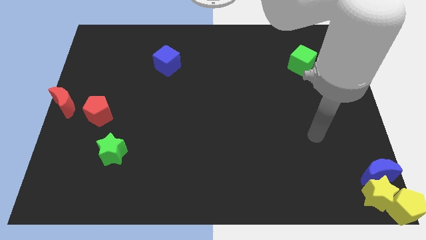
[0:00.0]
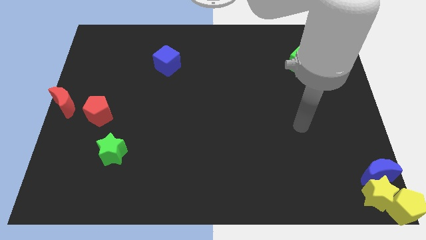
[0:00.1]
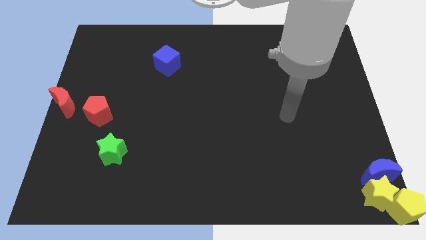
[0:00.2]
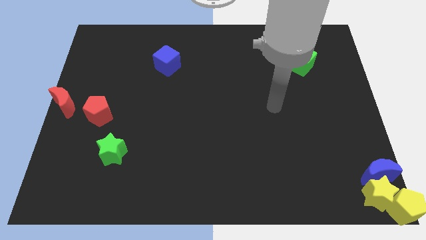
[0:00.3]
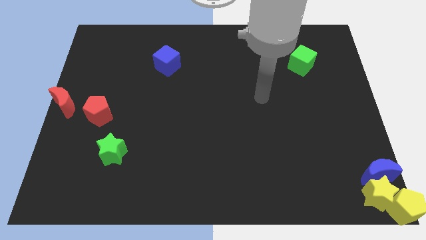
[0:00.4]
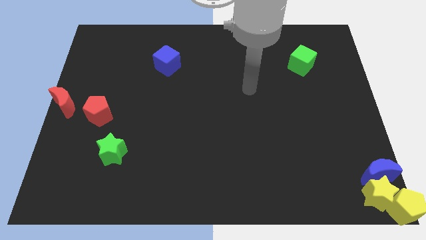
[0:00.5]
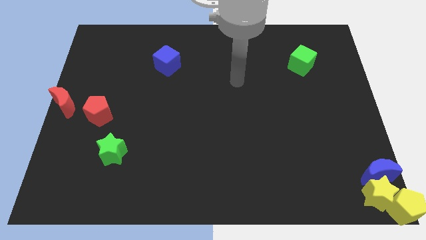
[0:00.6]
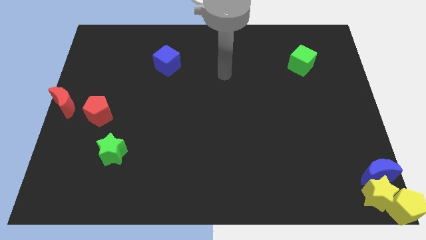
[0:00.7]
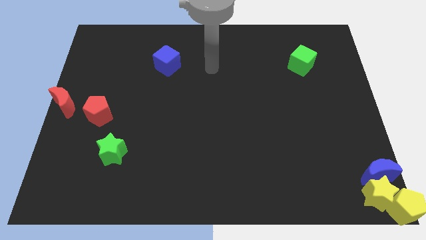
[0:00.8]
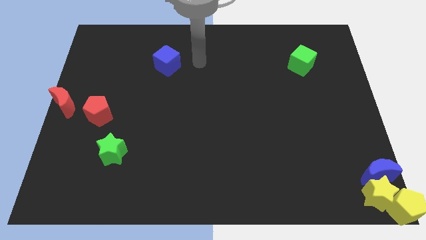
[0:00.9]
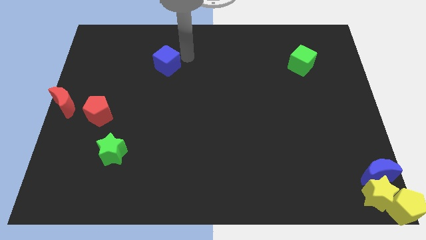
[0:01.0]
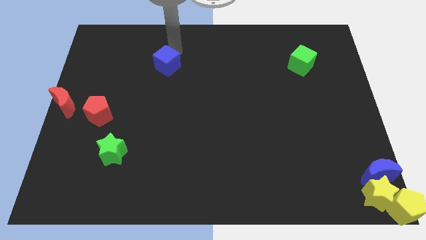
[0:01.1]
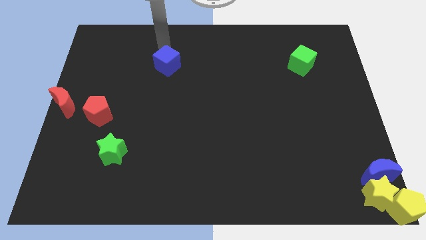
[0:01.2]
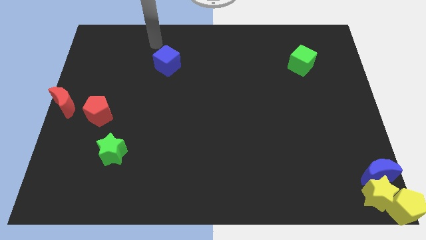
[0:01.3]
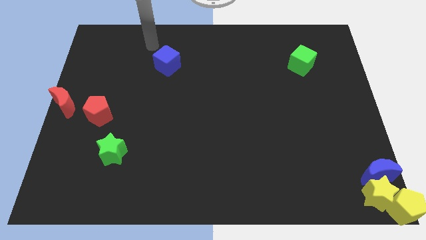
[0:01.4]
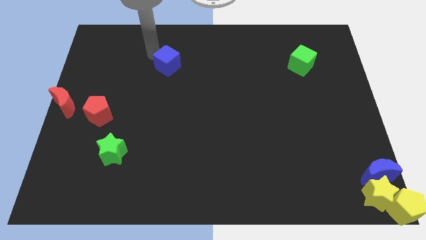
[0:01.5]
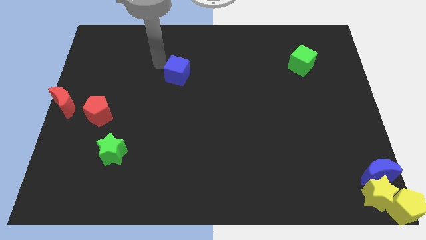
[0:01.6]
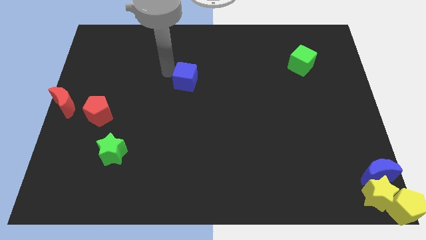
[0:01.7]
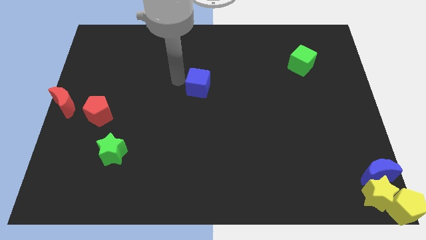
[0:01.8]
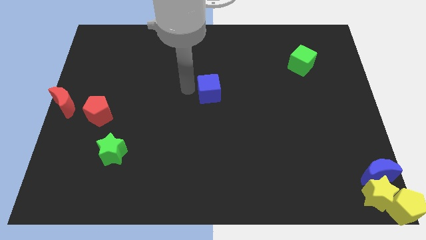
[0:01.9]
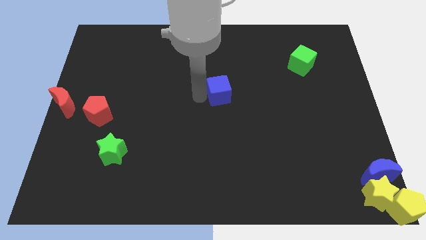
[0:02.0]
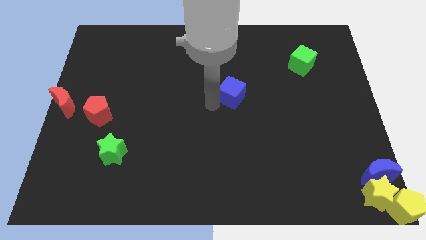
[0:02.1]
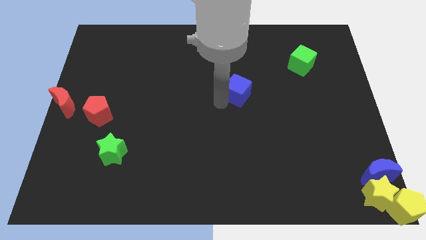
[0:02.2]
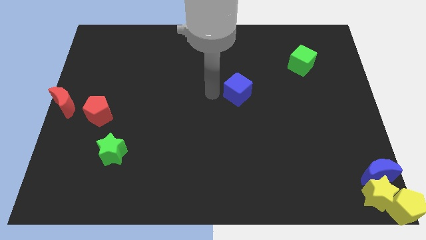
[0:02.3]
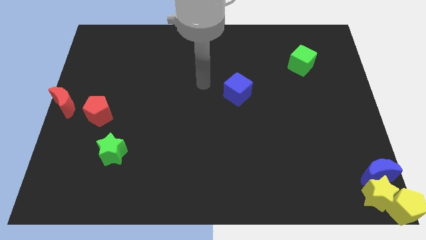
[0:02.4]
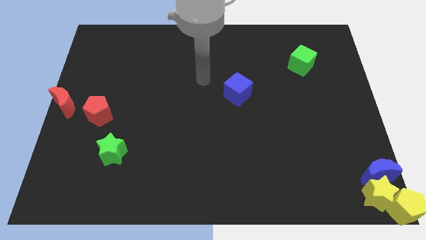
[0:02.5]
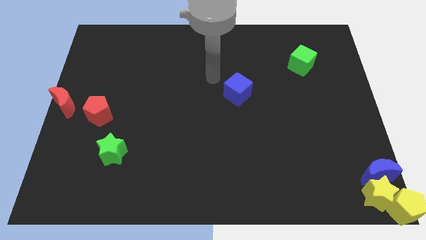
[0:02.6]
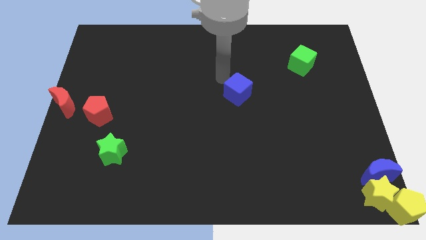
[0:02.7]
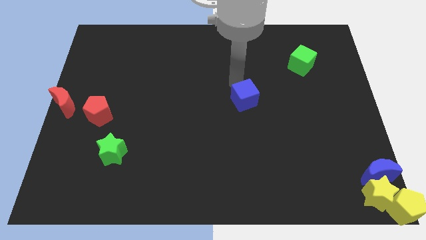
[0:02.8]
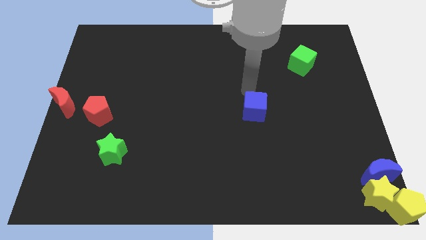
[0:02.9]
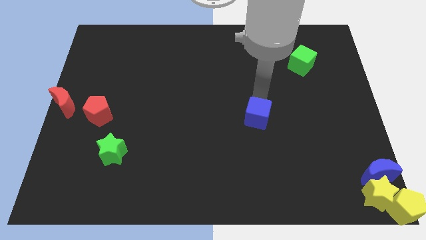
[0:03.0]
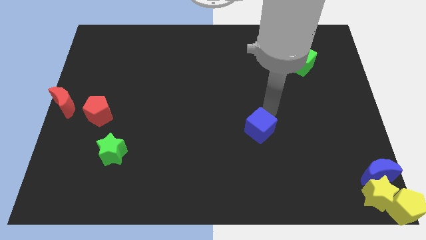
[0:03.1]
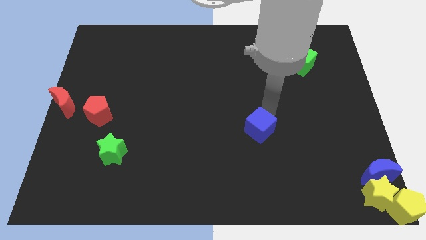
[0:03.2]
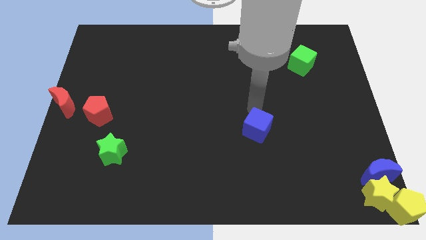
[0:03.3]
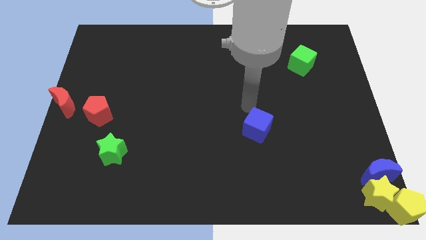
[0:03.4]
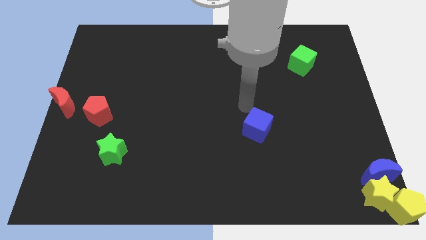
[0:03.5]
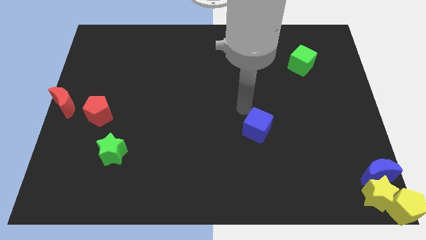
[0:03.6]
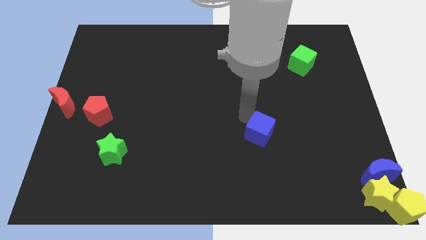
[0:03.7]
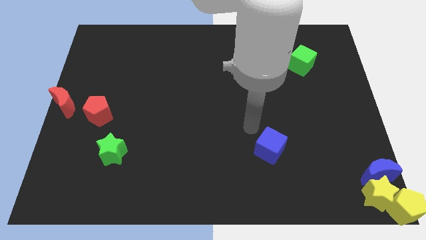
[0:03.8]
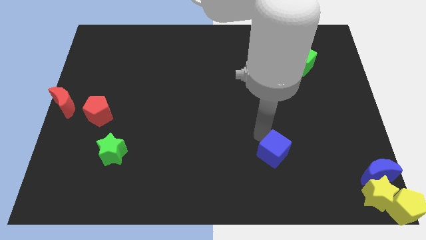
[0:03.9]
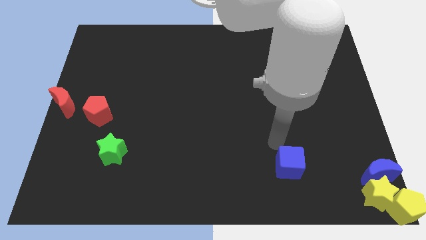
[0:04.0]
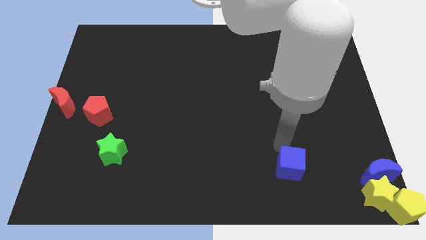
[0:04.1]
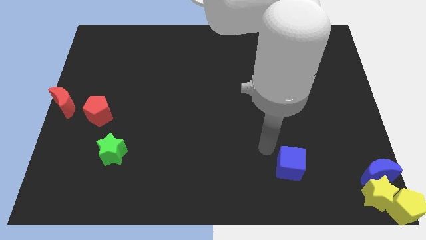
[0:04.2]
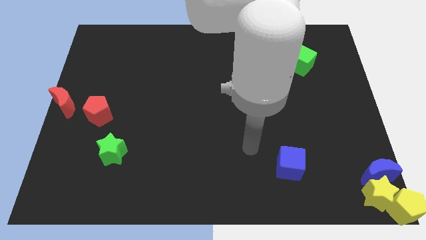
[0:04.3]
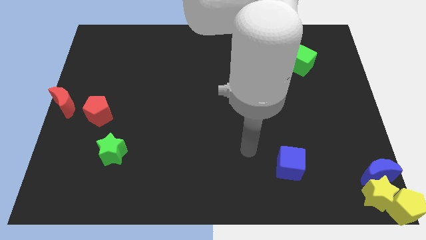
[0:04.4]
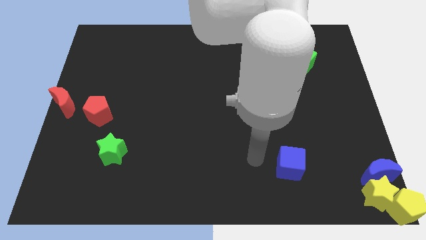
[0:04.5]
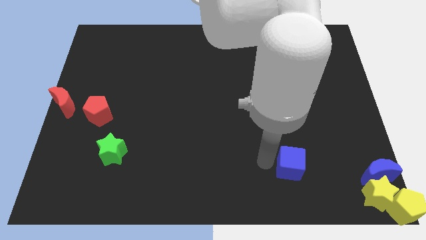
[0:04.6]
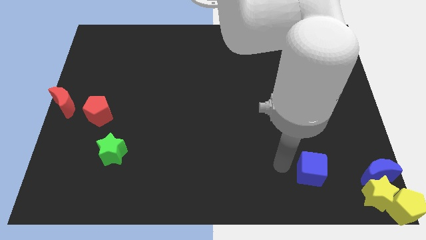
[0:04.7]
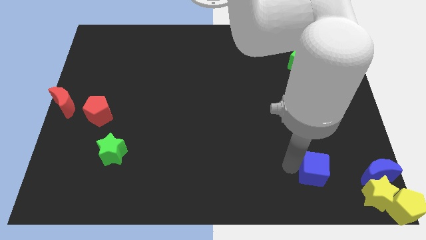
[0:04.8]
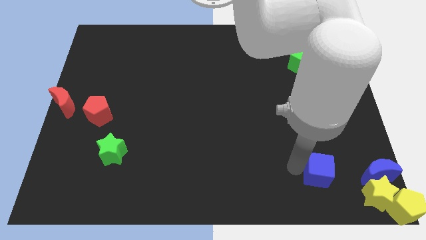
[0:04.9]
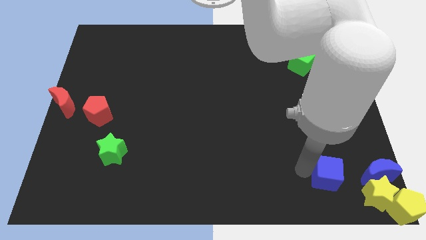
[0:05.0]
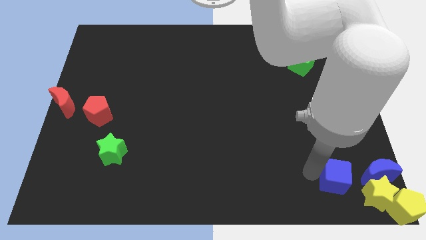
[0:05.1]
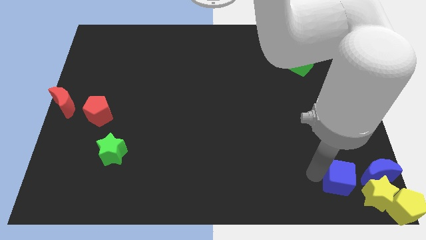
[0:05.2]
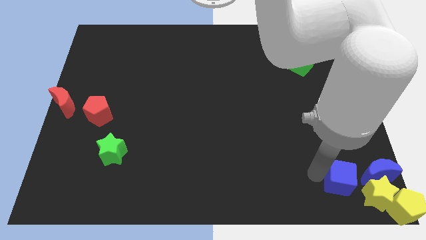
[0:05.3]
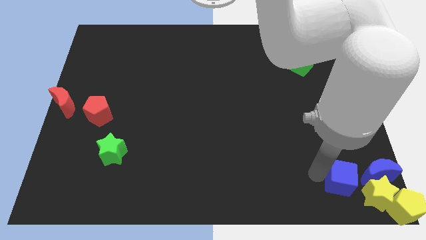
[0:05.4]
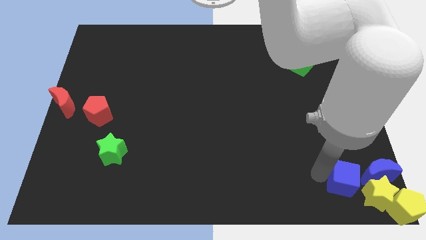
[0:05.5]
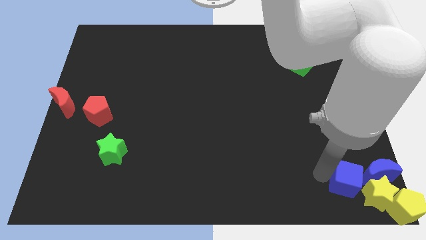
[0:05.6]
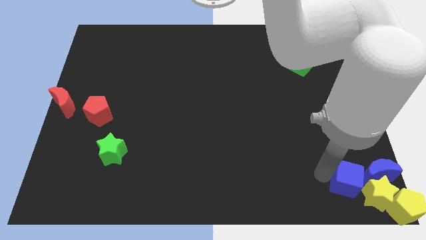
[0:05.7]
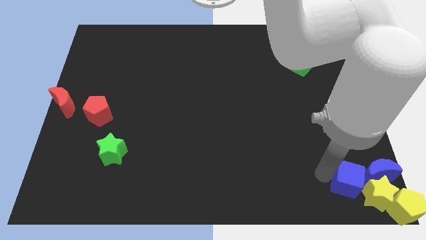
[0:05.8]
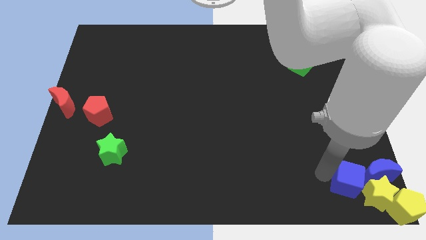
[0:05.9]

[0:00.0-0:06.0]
push blue cube to the left of blue crescent

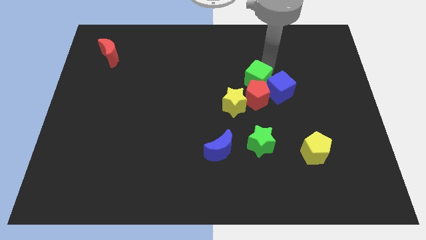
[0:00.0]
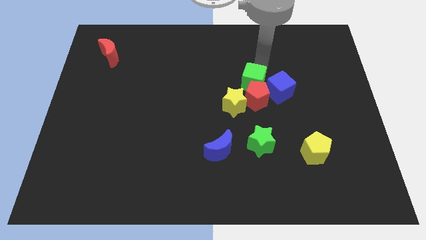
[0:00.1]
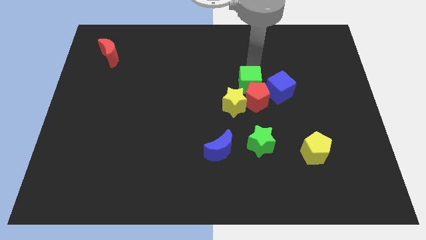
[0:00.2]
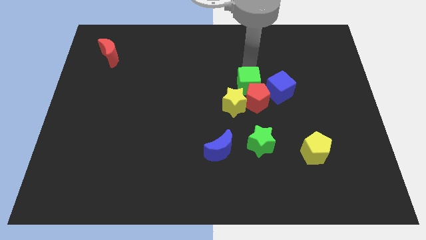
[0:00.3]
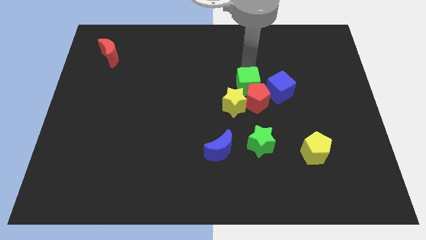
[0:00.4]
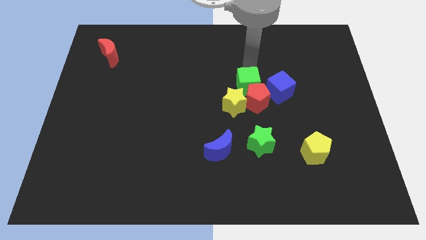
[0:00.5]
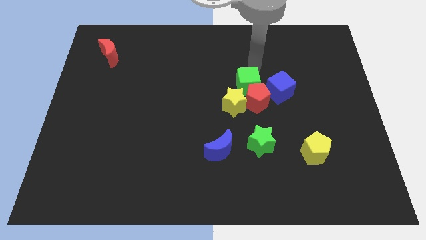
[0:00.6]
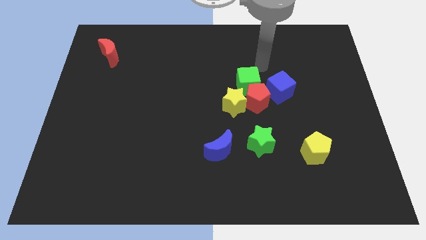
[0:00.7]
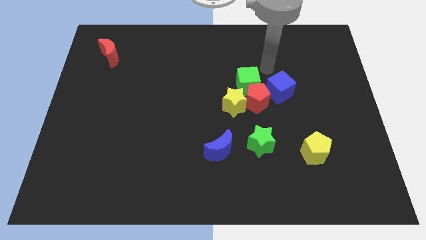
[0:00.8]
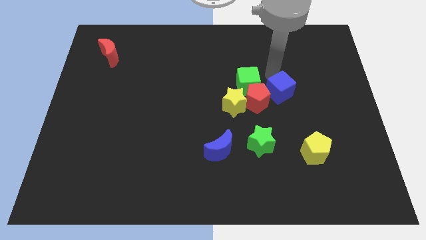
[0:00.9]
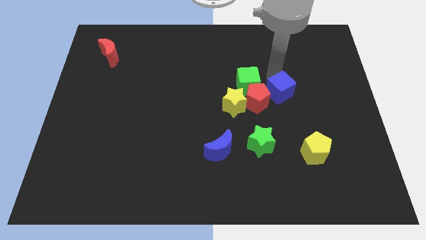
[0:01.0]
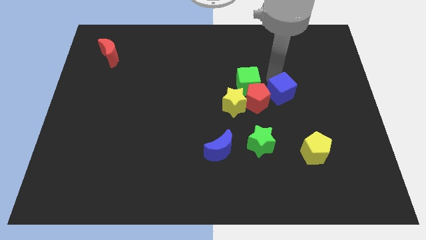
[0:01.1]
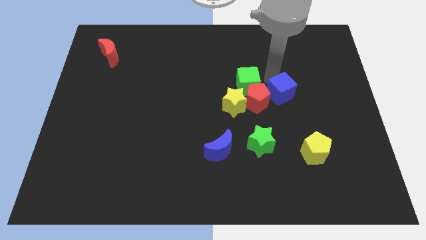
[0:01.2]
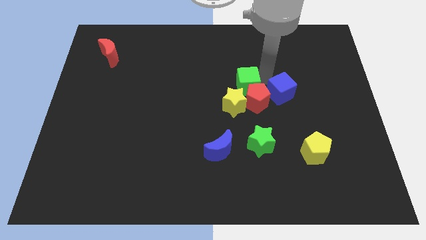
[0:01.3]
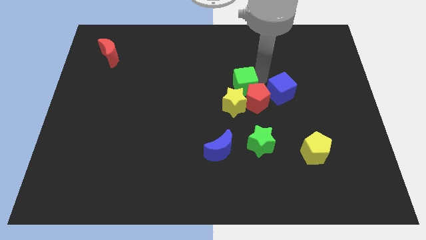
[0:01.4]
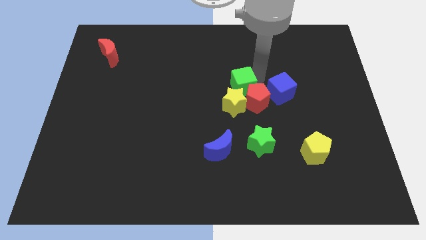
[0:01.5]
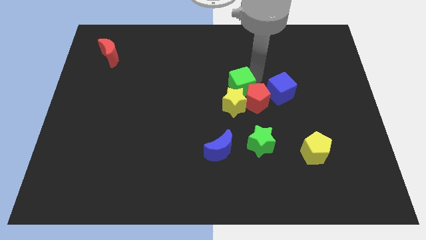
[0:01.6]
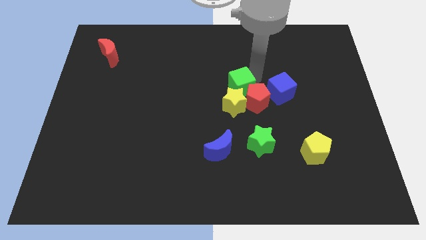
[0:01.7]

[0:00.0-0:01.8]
separate the green cube from the blue cube

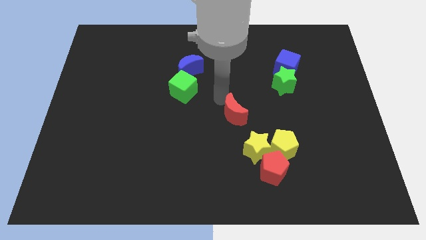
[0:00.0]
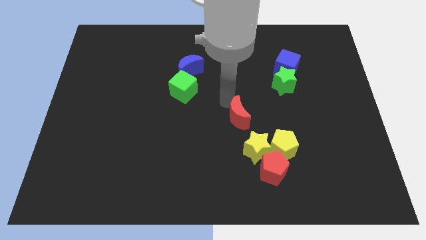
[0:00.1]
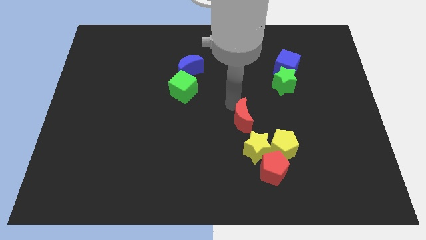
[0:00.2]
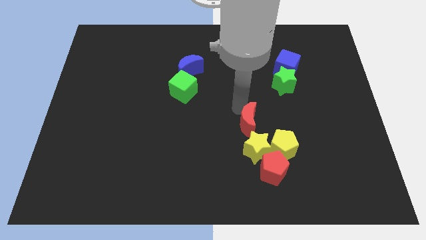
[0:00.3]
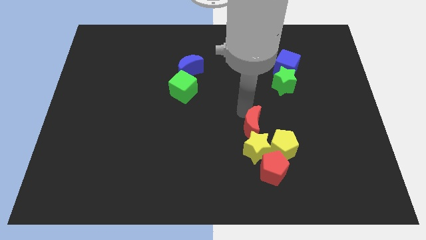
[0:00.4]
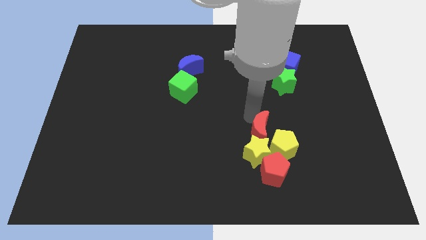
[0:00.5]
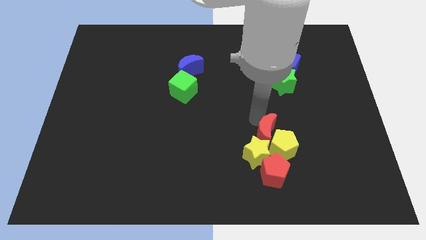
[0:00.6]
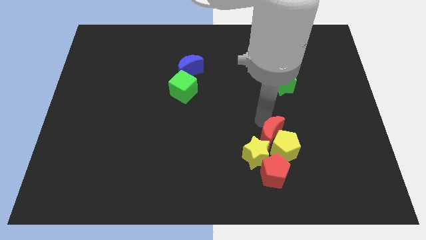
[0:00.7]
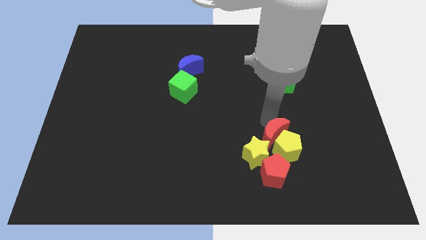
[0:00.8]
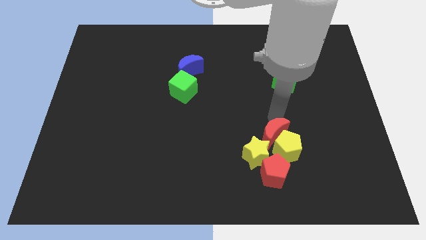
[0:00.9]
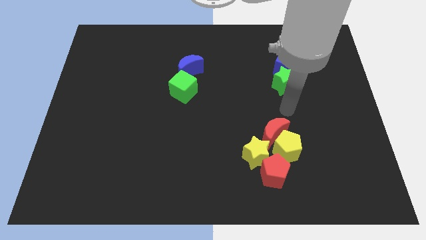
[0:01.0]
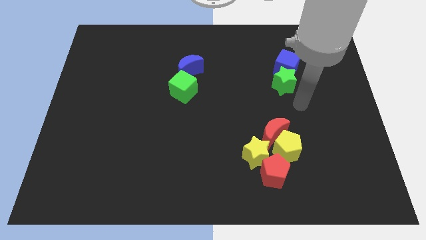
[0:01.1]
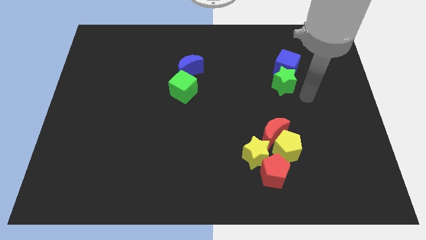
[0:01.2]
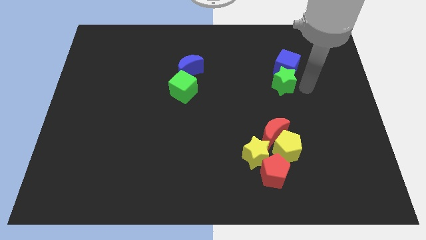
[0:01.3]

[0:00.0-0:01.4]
place the red moon above the yellow pentagon
